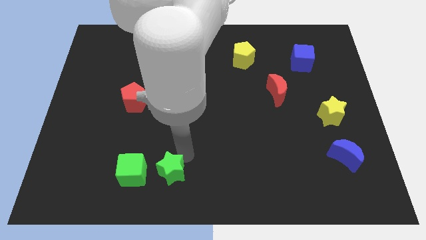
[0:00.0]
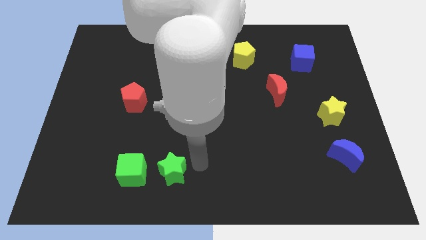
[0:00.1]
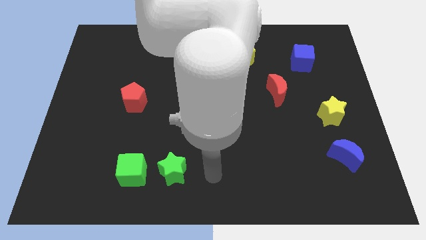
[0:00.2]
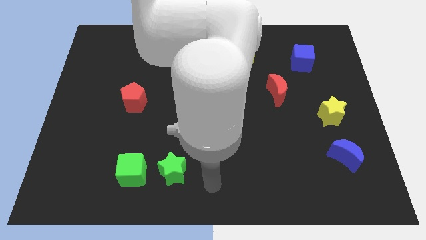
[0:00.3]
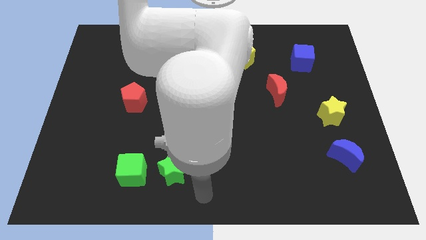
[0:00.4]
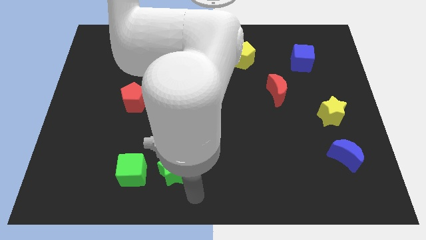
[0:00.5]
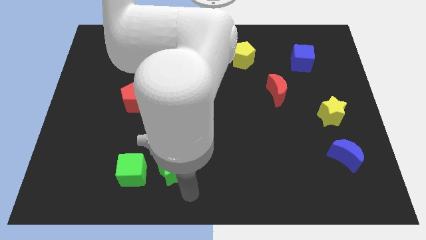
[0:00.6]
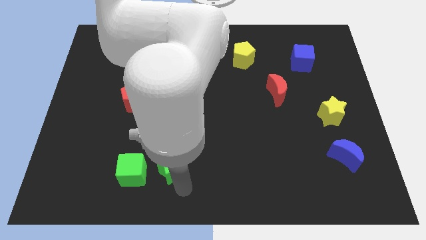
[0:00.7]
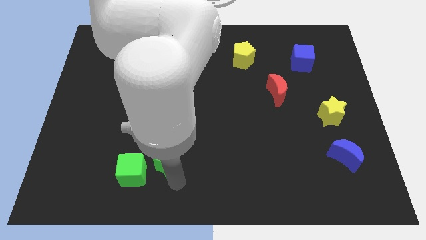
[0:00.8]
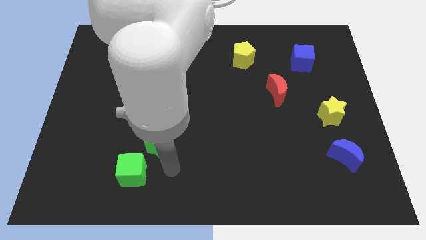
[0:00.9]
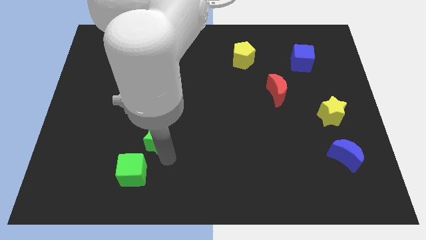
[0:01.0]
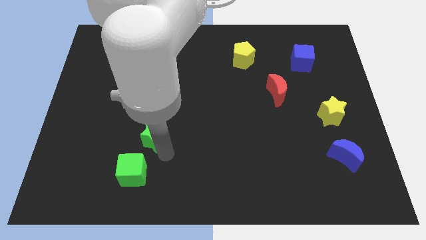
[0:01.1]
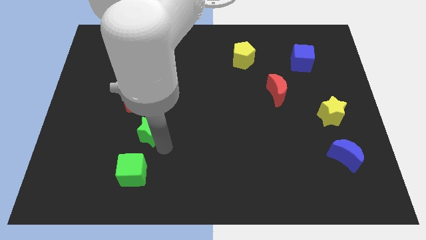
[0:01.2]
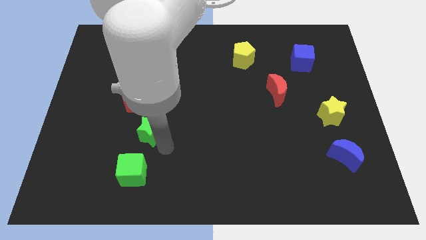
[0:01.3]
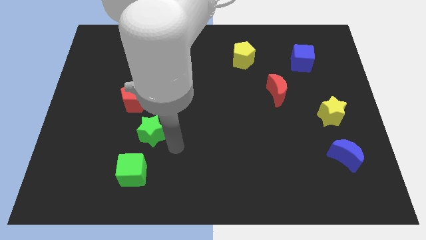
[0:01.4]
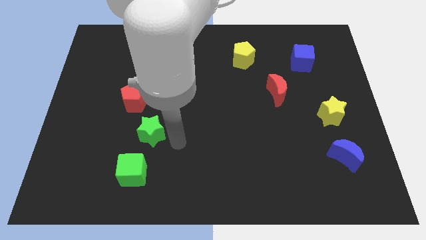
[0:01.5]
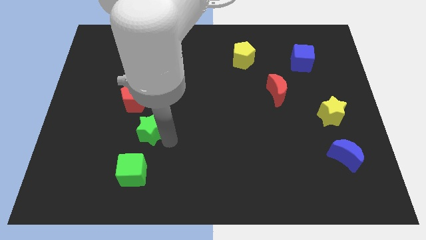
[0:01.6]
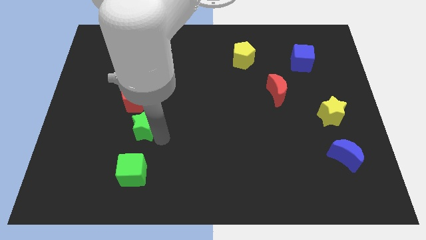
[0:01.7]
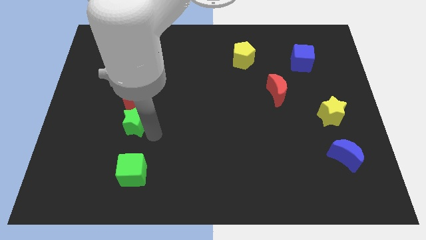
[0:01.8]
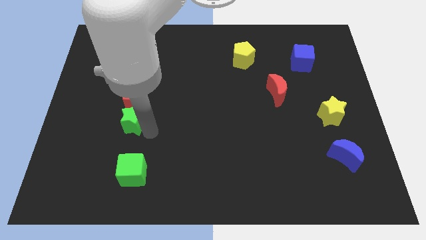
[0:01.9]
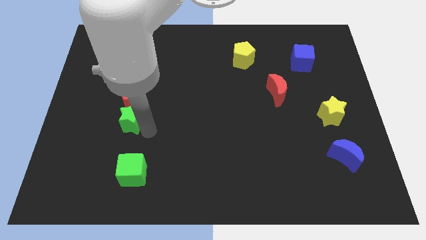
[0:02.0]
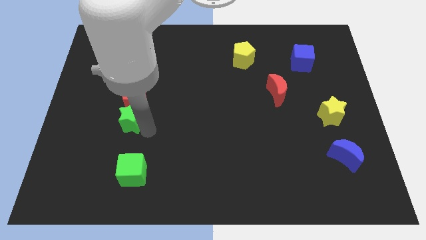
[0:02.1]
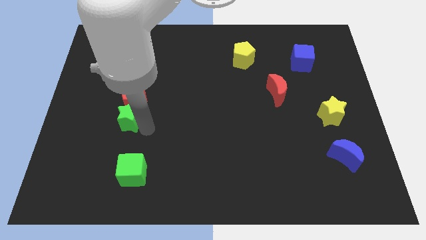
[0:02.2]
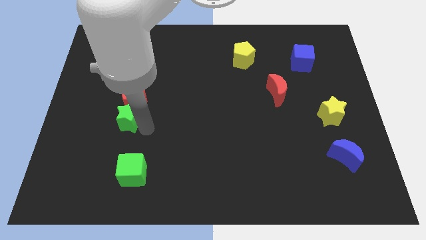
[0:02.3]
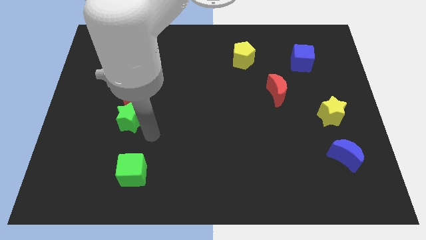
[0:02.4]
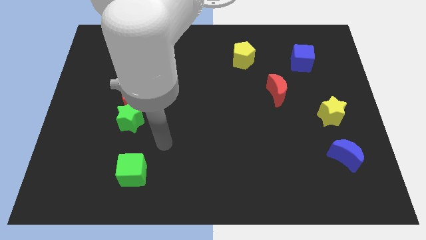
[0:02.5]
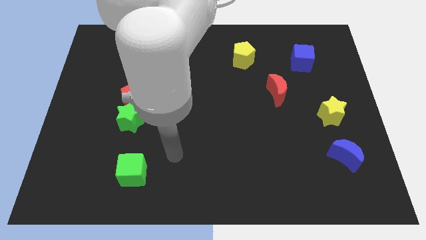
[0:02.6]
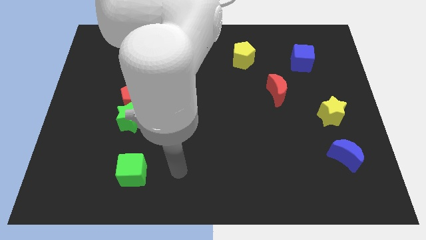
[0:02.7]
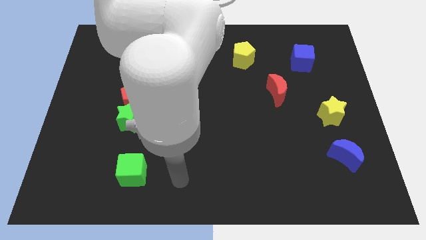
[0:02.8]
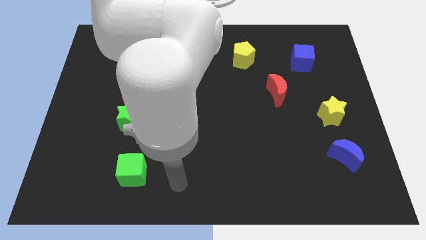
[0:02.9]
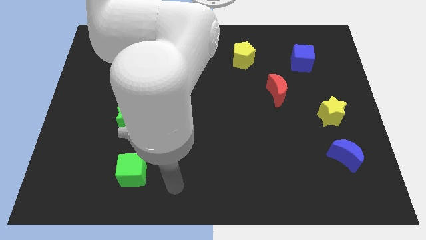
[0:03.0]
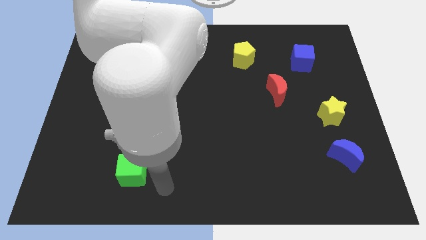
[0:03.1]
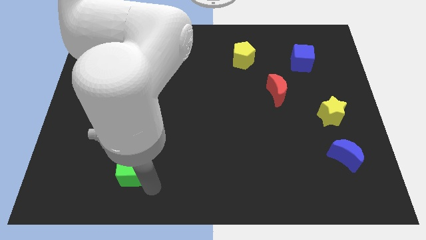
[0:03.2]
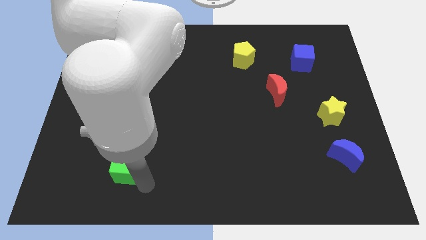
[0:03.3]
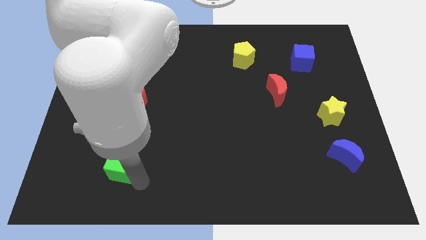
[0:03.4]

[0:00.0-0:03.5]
place the green star to the bottom of the red pentagon

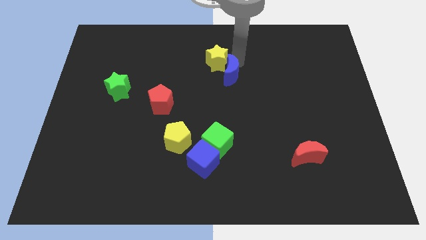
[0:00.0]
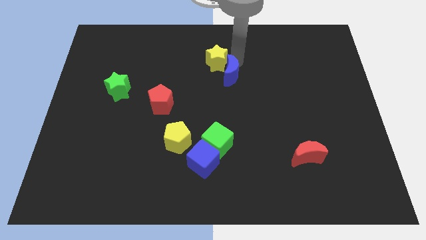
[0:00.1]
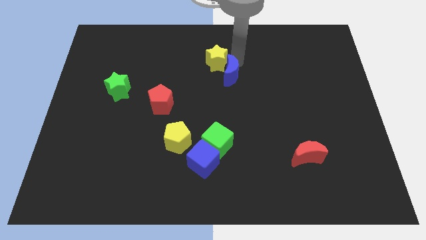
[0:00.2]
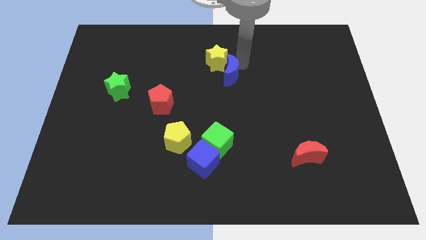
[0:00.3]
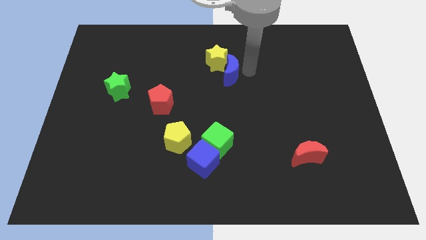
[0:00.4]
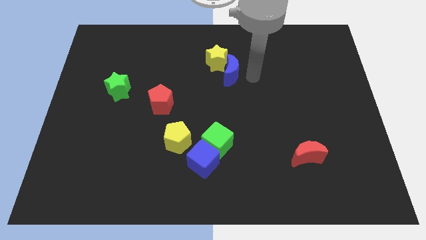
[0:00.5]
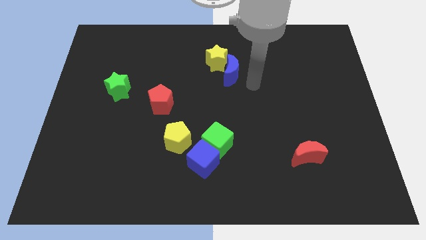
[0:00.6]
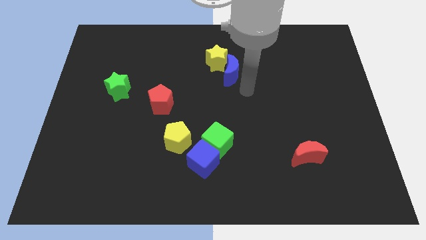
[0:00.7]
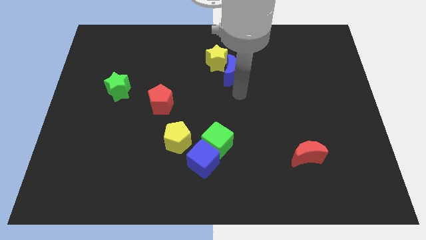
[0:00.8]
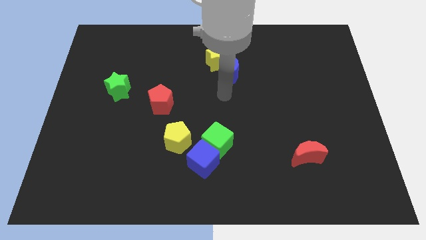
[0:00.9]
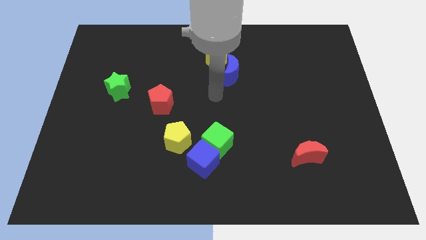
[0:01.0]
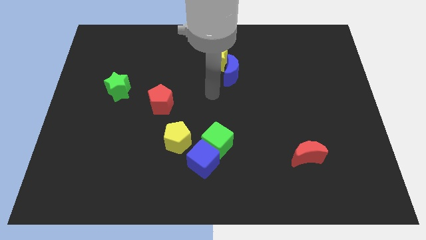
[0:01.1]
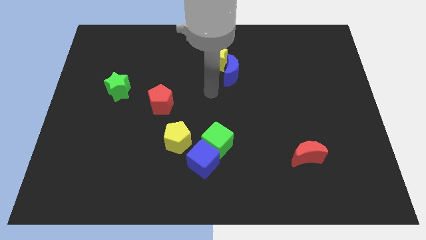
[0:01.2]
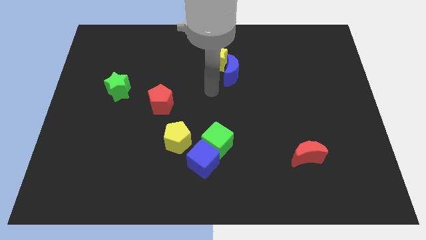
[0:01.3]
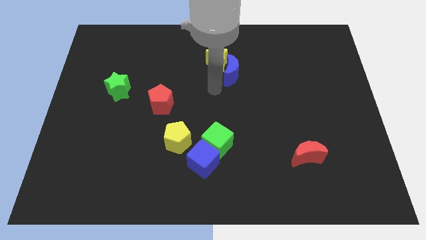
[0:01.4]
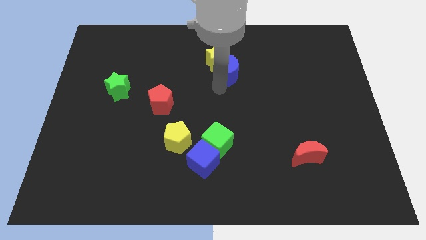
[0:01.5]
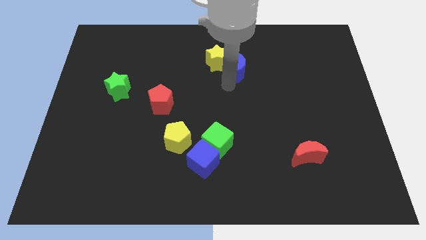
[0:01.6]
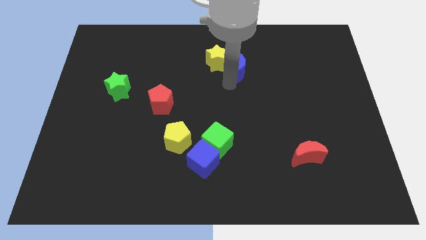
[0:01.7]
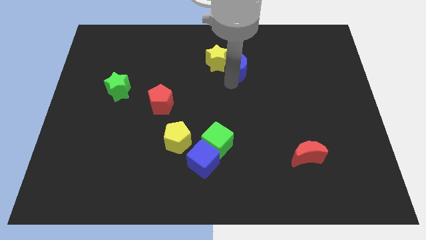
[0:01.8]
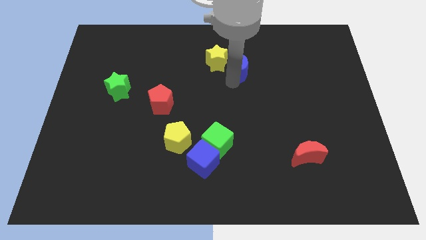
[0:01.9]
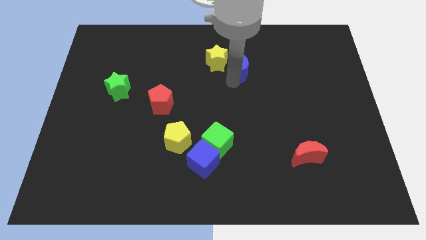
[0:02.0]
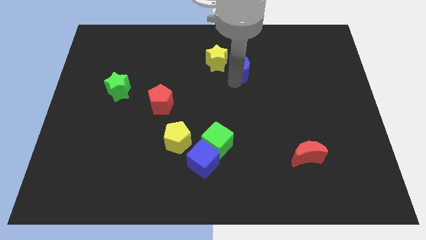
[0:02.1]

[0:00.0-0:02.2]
separate blue moon from yellow star

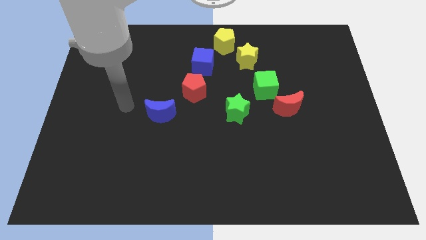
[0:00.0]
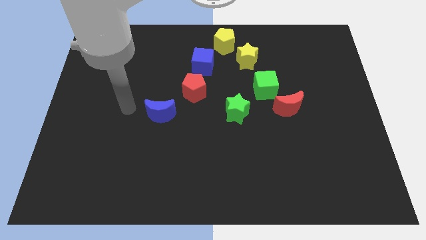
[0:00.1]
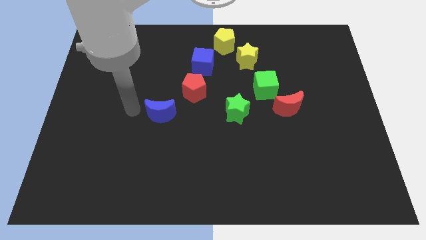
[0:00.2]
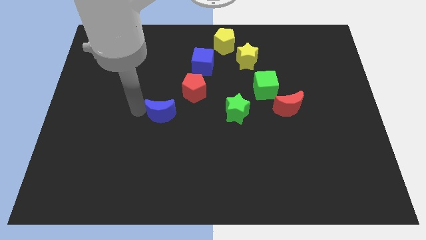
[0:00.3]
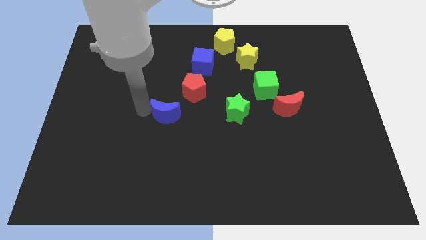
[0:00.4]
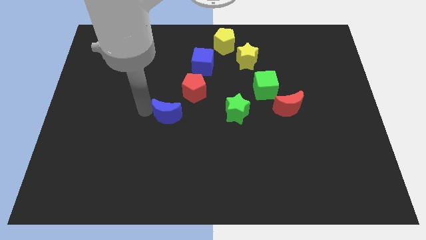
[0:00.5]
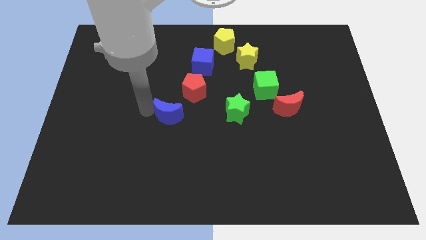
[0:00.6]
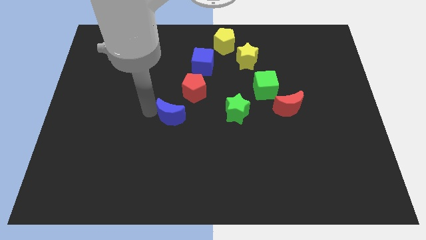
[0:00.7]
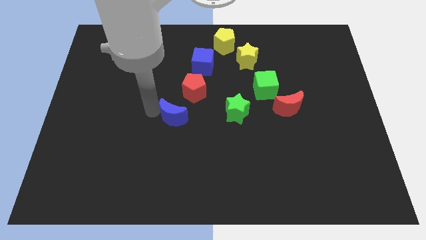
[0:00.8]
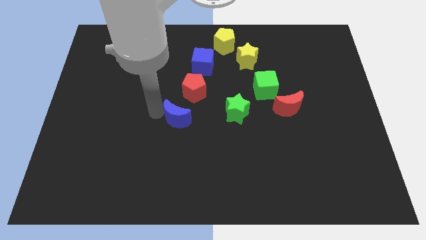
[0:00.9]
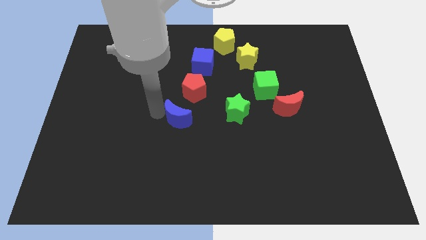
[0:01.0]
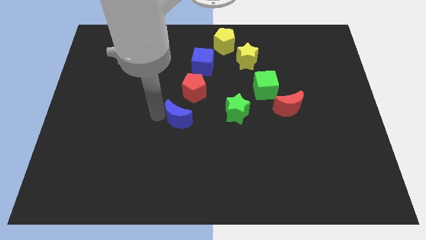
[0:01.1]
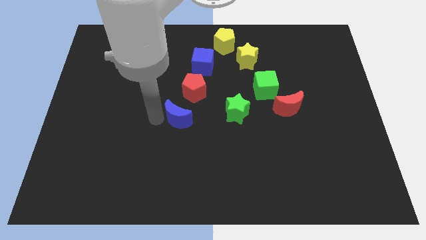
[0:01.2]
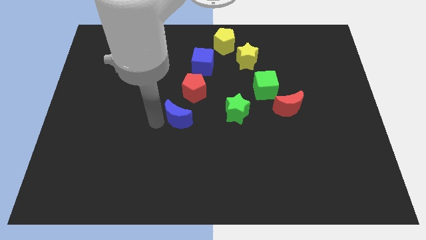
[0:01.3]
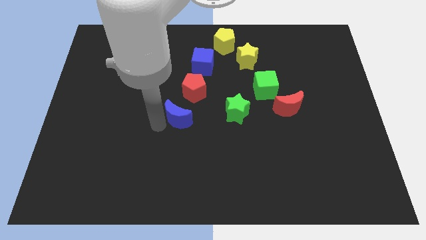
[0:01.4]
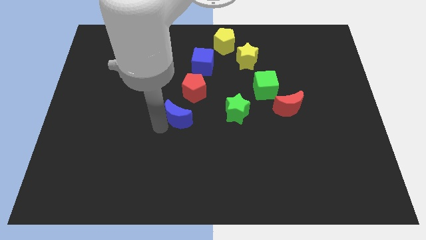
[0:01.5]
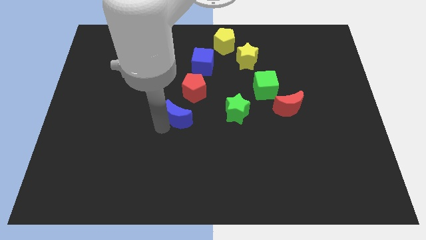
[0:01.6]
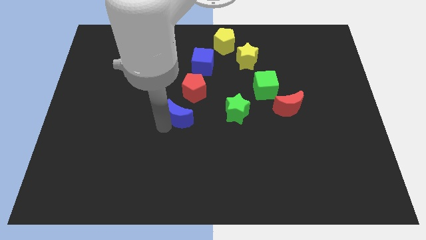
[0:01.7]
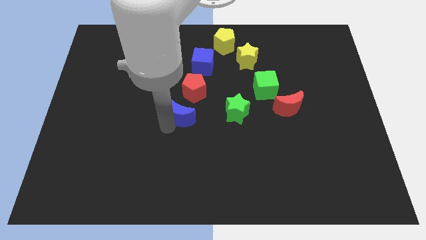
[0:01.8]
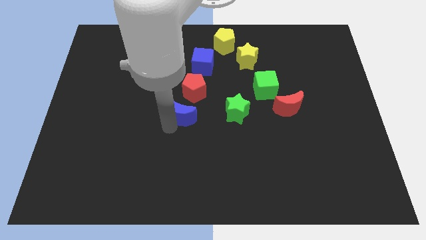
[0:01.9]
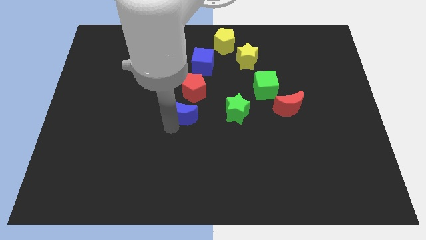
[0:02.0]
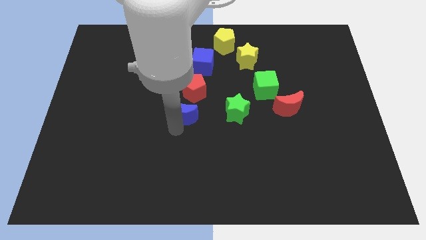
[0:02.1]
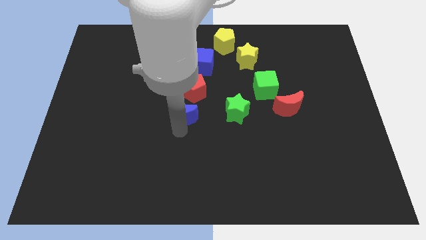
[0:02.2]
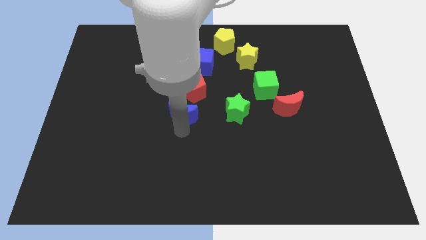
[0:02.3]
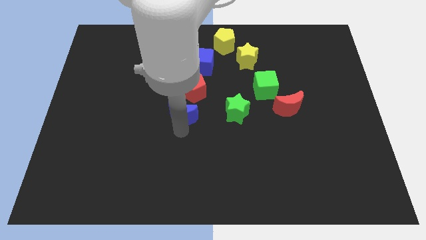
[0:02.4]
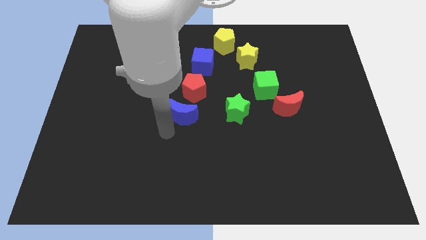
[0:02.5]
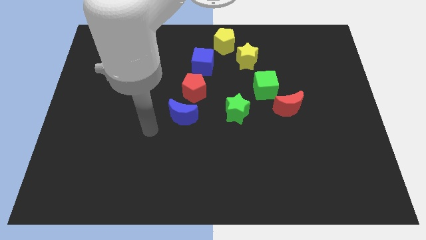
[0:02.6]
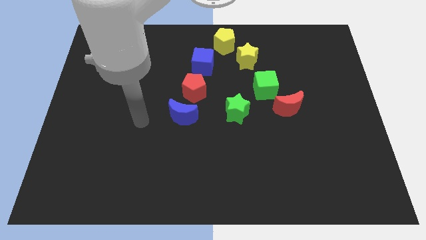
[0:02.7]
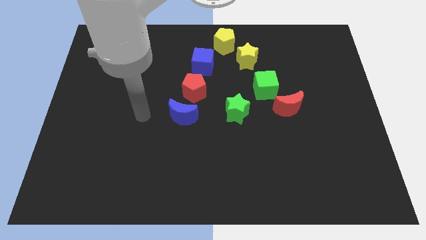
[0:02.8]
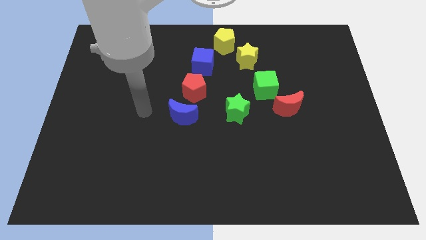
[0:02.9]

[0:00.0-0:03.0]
place blue crescent below red pentagon

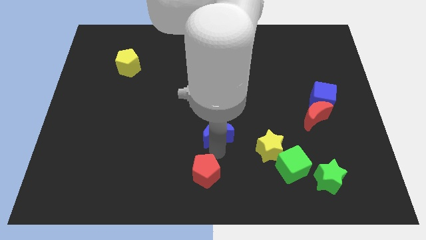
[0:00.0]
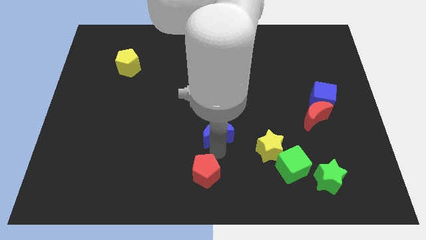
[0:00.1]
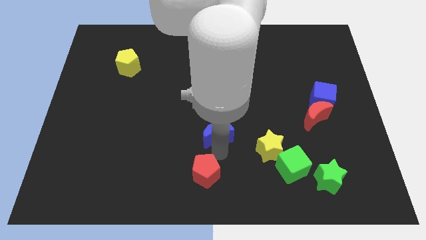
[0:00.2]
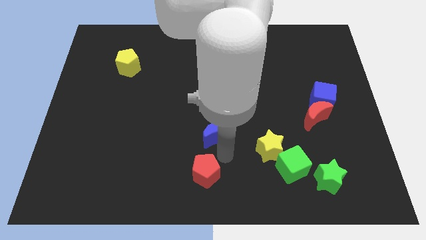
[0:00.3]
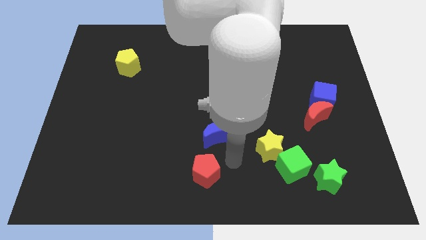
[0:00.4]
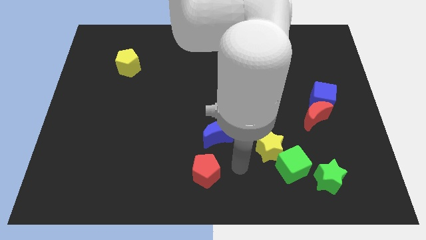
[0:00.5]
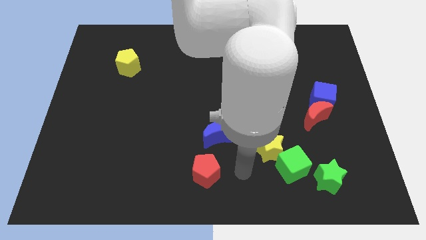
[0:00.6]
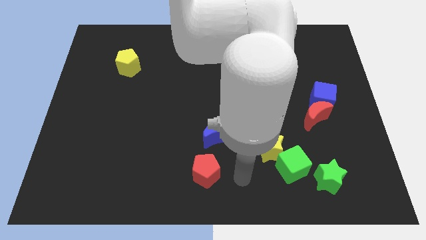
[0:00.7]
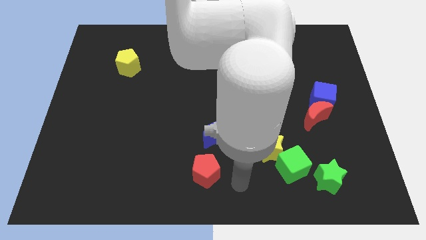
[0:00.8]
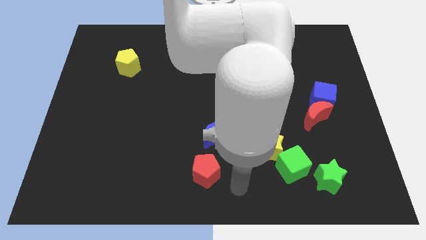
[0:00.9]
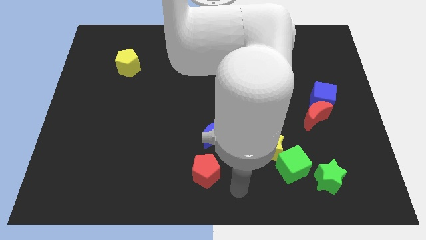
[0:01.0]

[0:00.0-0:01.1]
move your hand away from blue moon
